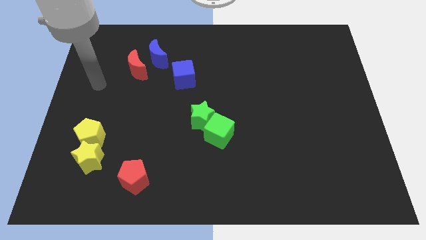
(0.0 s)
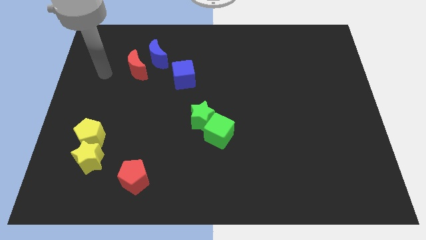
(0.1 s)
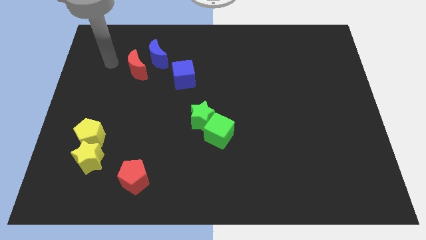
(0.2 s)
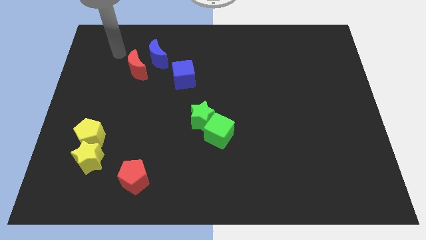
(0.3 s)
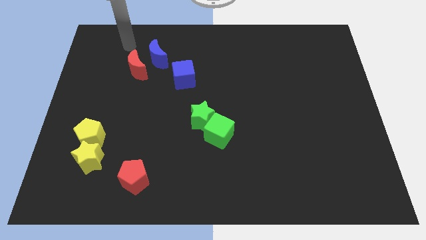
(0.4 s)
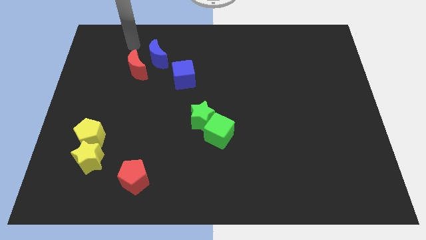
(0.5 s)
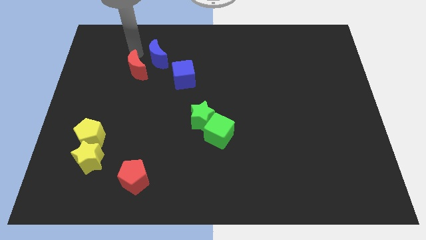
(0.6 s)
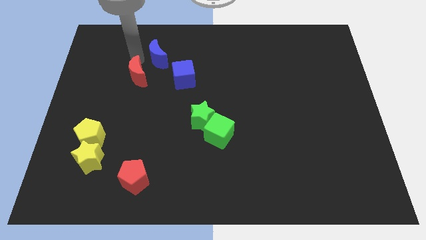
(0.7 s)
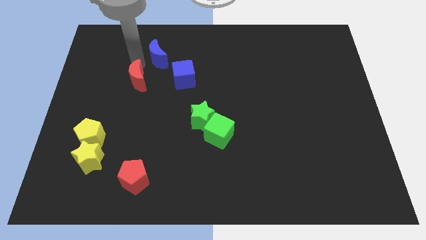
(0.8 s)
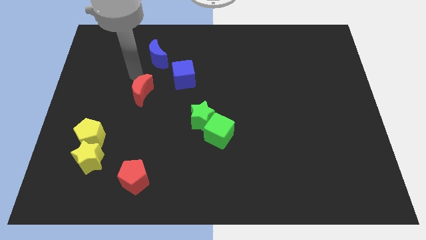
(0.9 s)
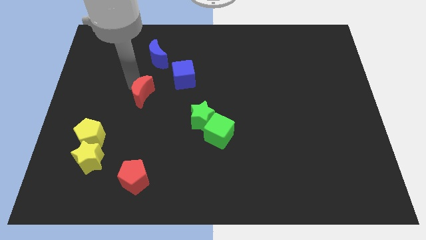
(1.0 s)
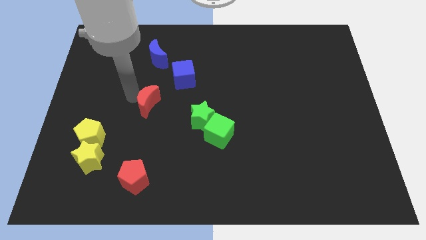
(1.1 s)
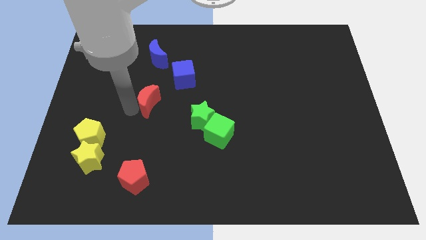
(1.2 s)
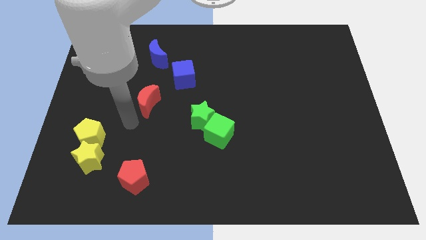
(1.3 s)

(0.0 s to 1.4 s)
slide the red moon diagonally to the bottom left of the blue cube

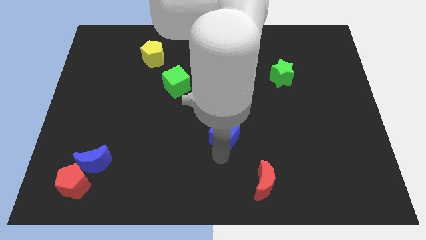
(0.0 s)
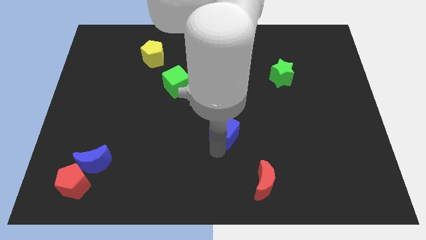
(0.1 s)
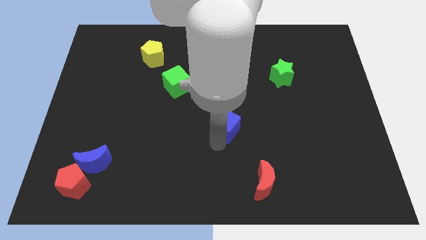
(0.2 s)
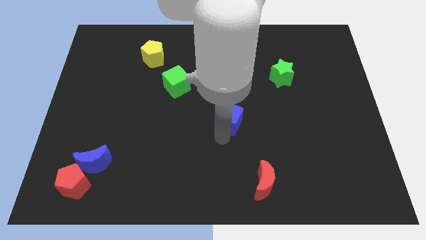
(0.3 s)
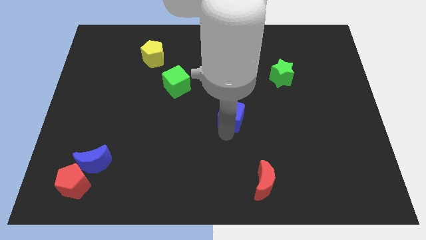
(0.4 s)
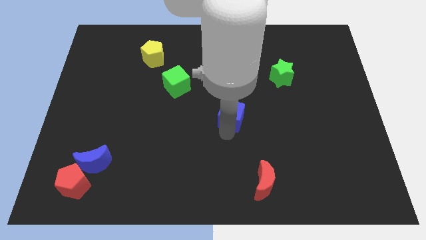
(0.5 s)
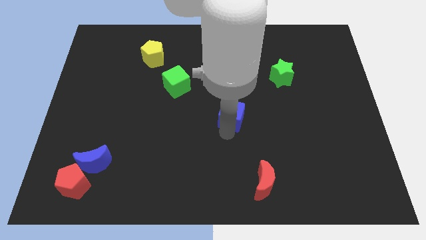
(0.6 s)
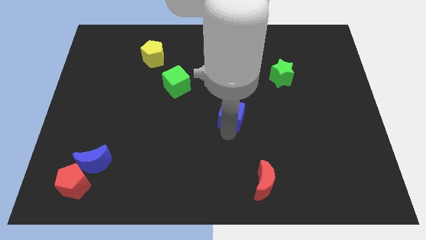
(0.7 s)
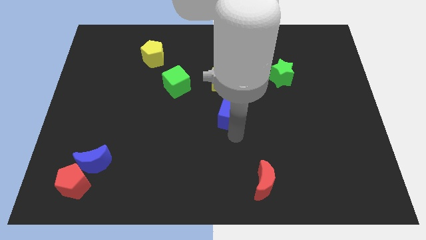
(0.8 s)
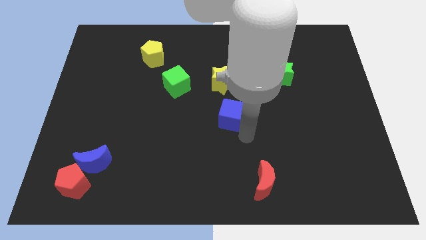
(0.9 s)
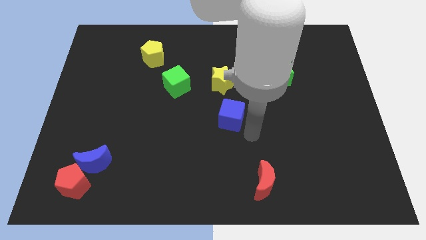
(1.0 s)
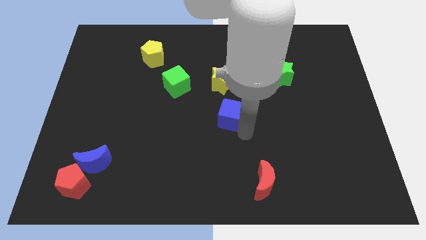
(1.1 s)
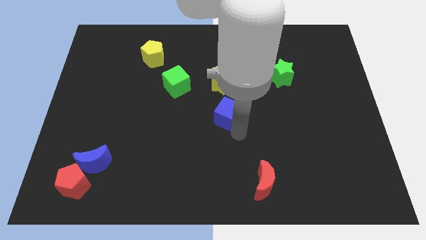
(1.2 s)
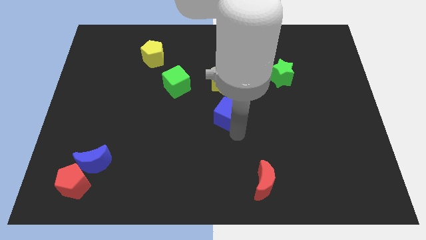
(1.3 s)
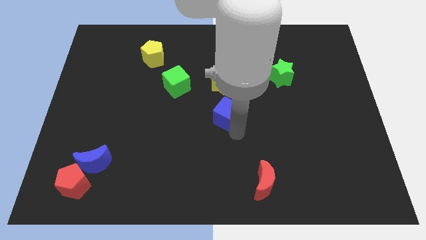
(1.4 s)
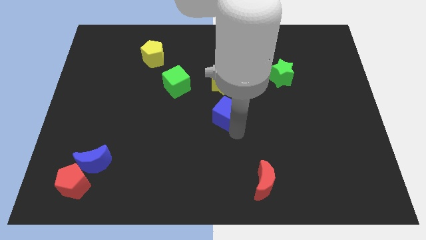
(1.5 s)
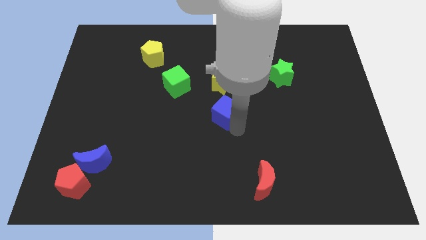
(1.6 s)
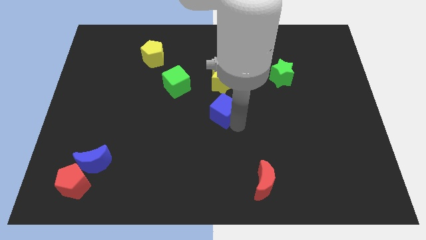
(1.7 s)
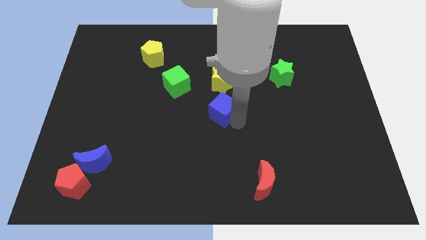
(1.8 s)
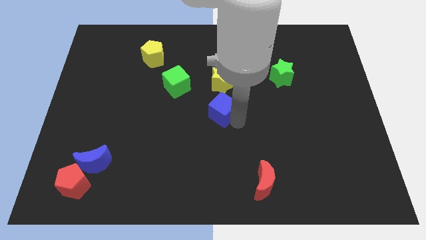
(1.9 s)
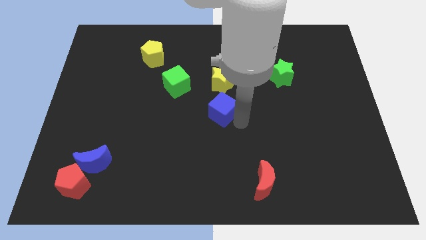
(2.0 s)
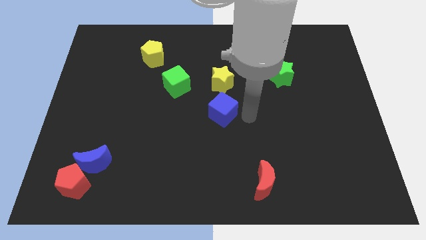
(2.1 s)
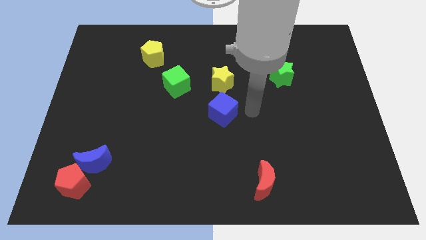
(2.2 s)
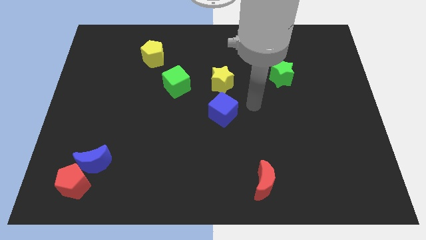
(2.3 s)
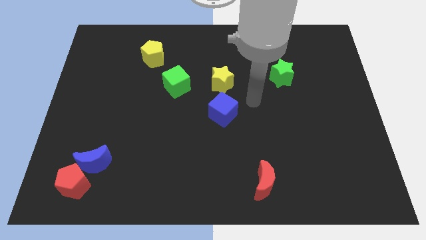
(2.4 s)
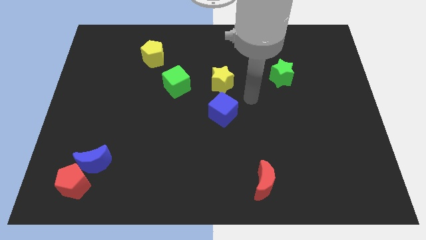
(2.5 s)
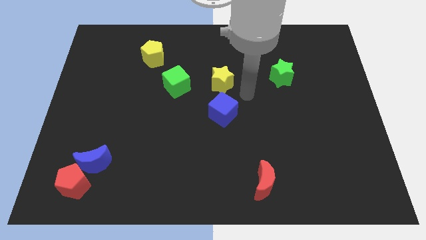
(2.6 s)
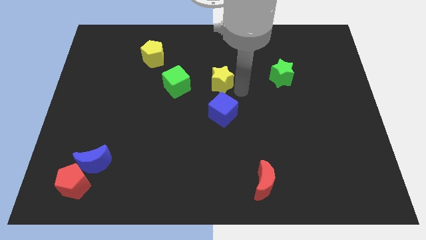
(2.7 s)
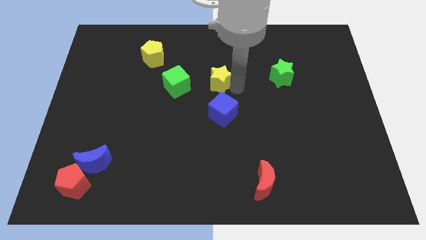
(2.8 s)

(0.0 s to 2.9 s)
place the blue cube at the bottom of the yellow star

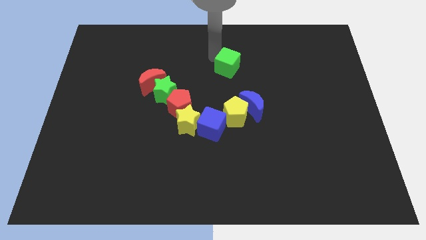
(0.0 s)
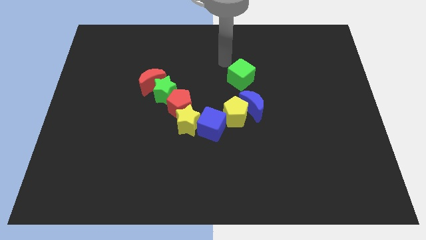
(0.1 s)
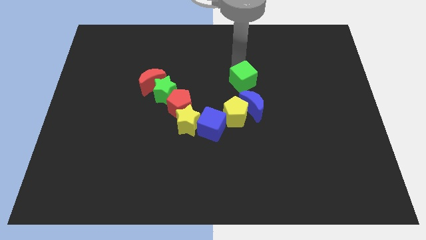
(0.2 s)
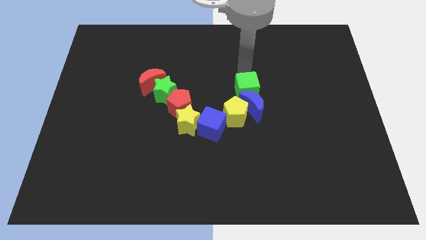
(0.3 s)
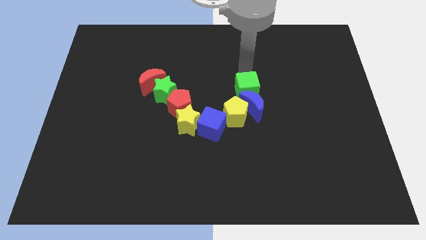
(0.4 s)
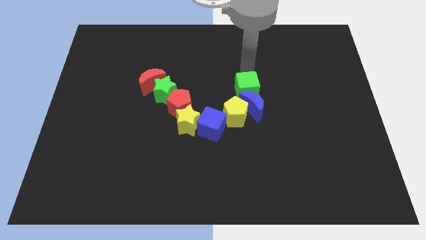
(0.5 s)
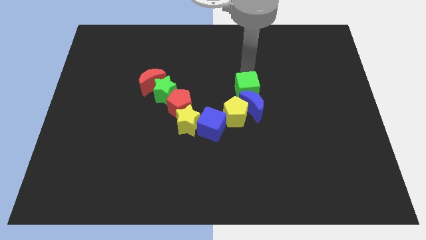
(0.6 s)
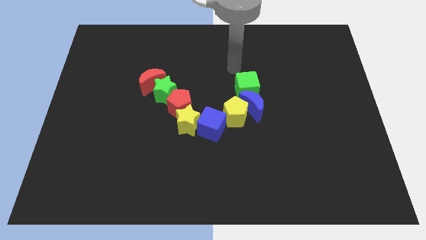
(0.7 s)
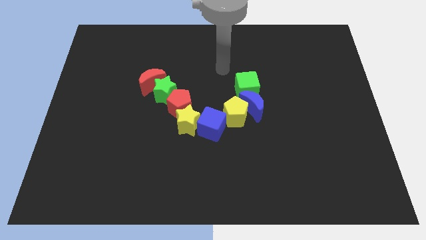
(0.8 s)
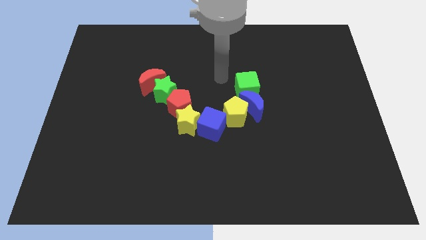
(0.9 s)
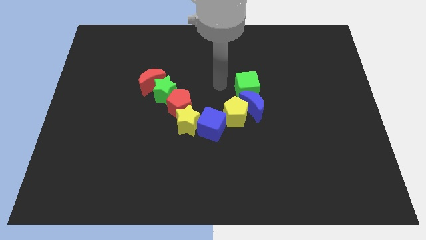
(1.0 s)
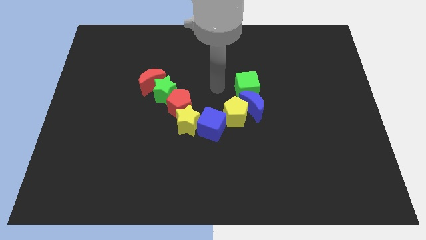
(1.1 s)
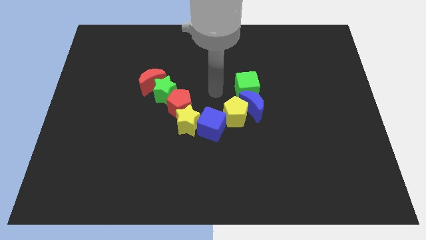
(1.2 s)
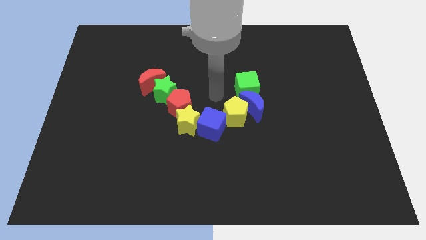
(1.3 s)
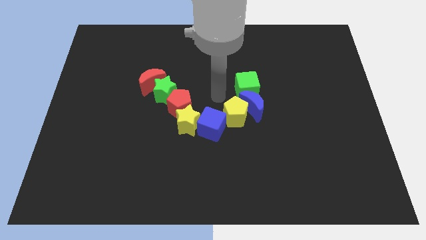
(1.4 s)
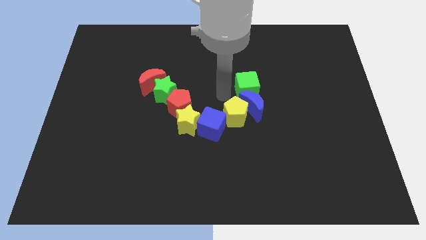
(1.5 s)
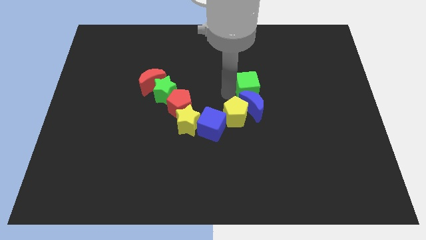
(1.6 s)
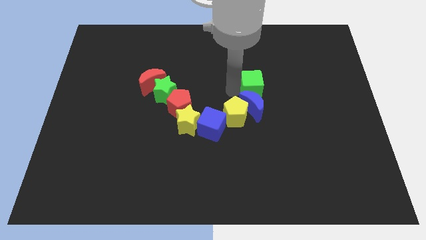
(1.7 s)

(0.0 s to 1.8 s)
place the green cube above the blue crescent

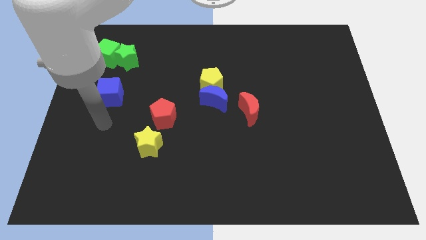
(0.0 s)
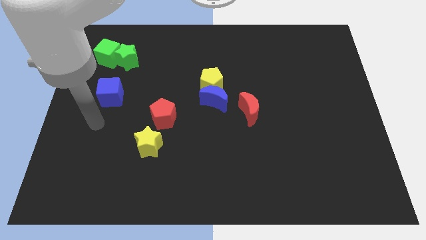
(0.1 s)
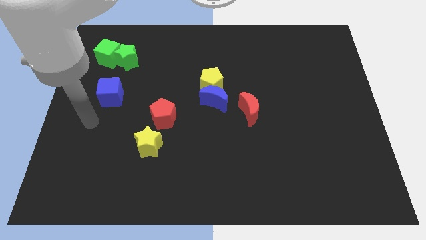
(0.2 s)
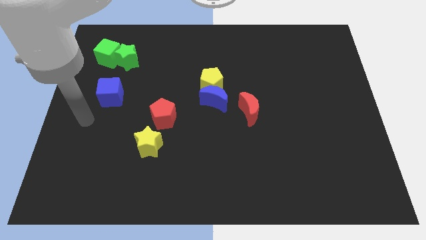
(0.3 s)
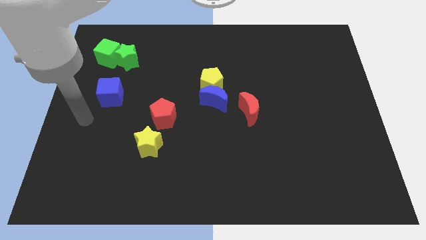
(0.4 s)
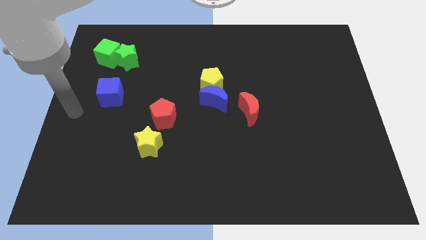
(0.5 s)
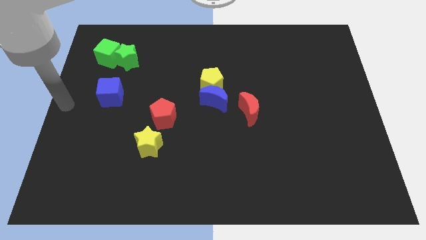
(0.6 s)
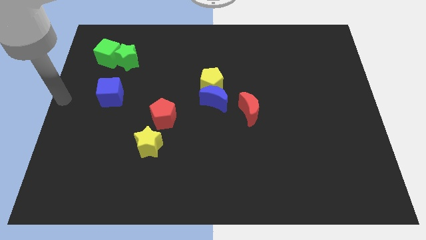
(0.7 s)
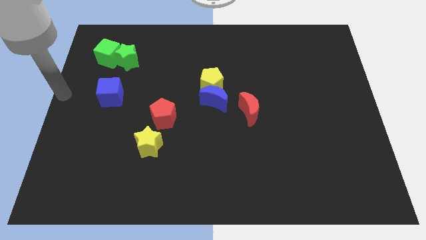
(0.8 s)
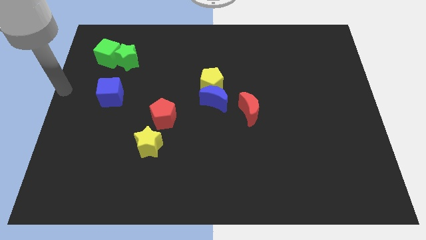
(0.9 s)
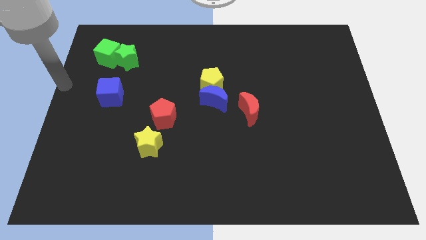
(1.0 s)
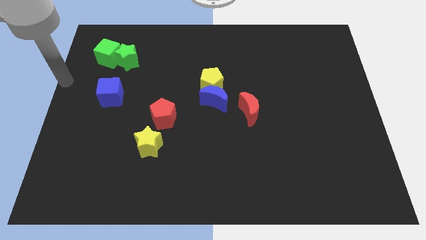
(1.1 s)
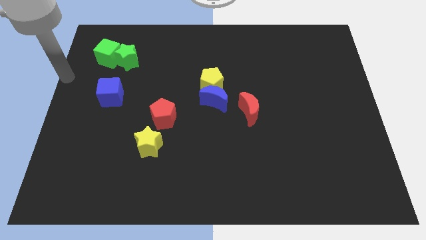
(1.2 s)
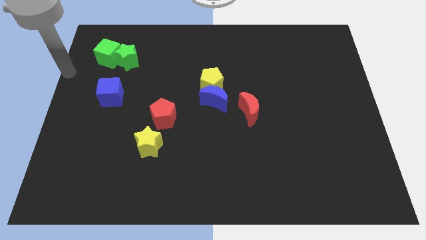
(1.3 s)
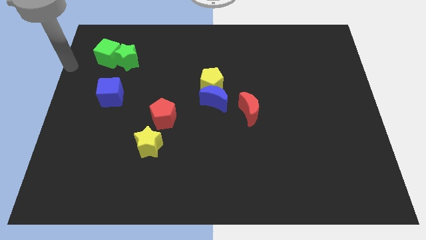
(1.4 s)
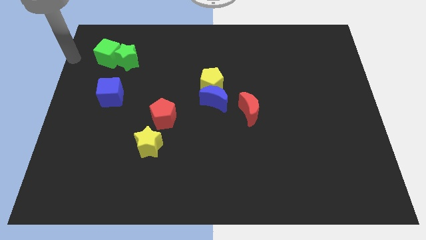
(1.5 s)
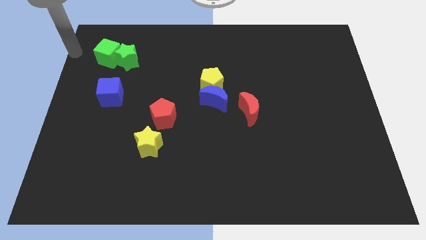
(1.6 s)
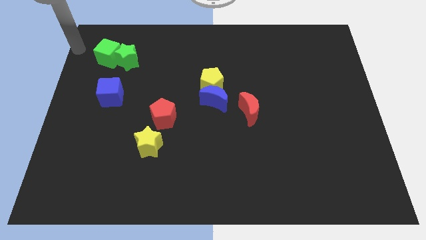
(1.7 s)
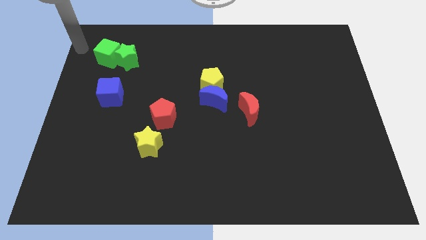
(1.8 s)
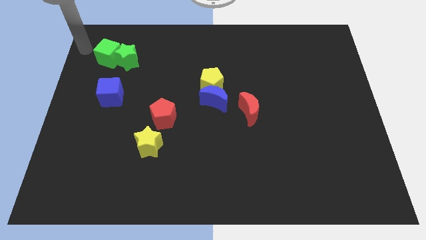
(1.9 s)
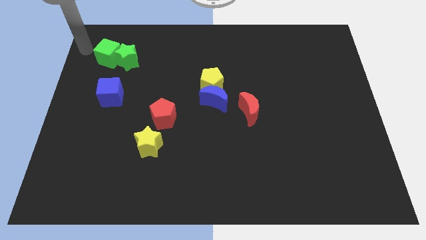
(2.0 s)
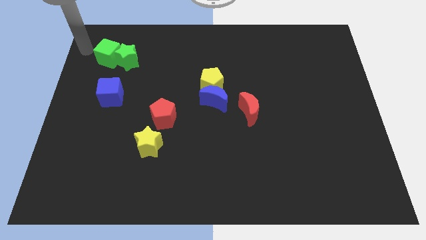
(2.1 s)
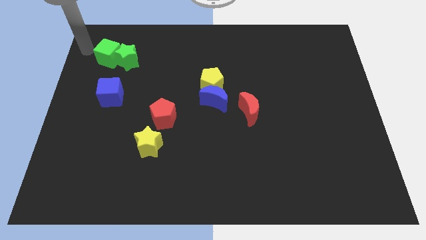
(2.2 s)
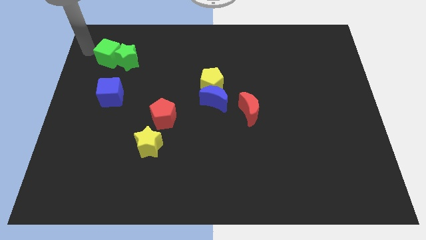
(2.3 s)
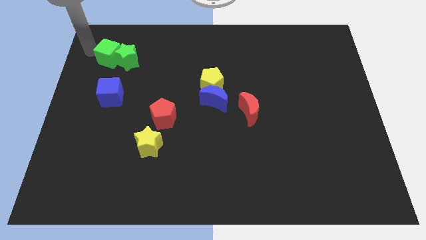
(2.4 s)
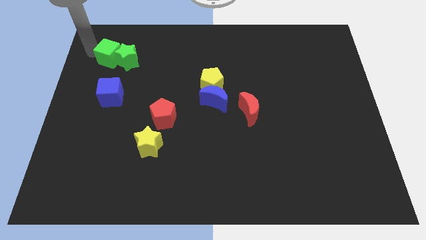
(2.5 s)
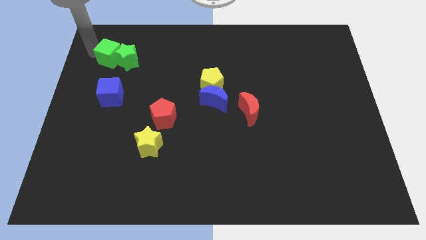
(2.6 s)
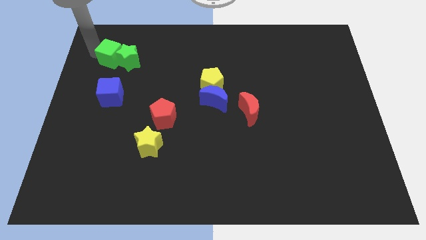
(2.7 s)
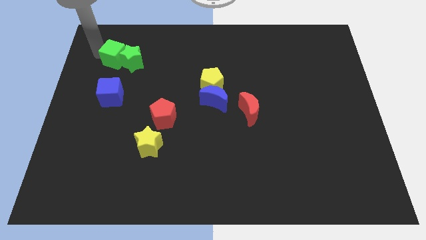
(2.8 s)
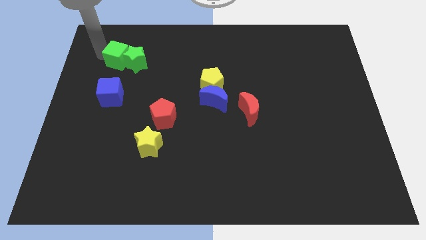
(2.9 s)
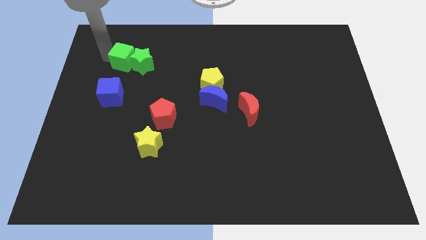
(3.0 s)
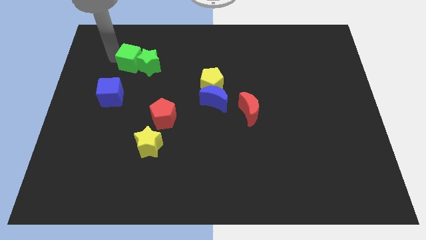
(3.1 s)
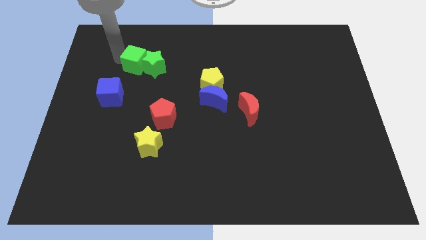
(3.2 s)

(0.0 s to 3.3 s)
push the green cube and star towards the yellow pentagon
